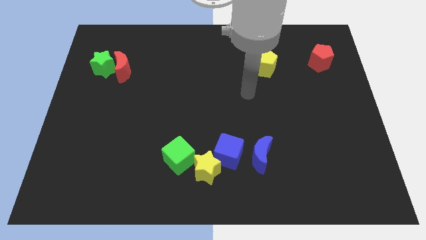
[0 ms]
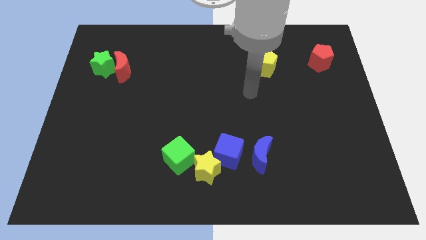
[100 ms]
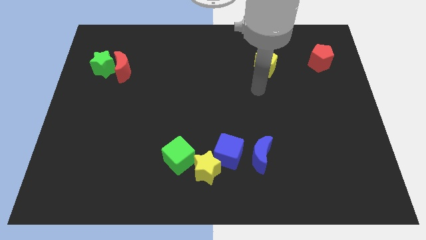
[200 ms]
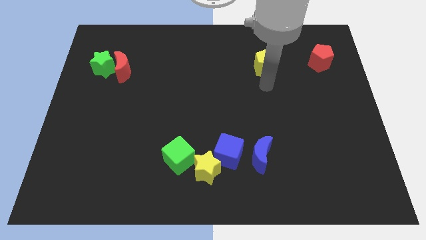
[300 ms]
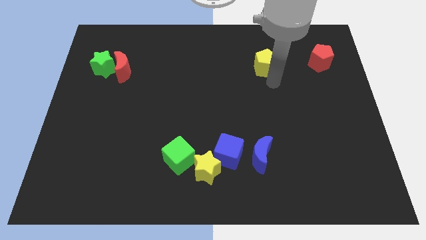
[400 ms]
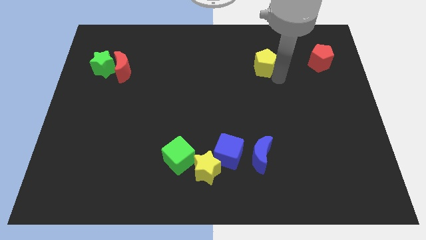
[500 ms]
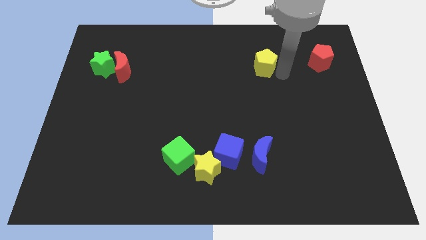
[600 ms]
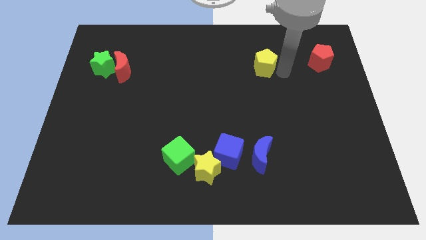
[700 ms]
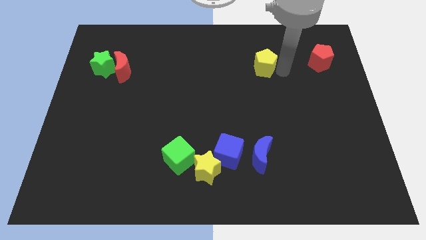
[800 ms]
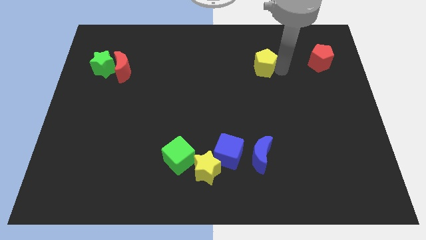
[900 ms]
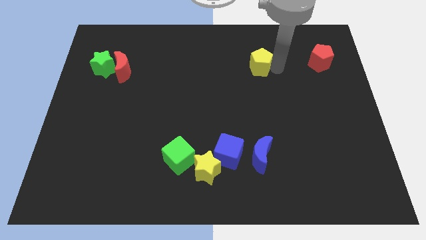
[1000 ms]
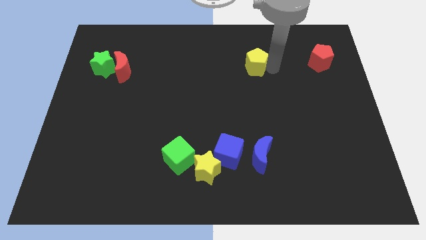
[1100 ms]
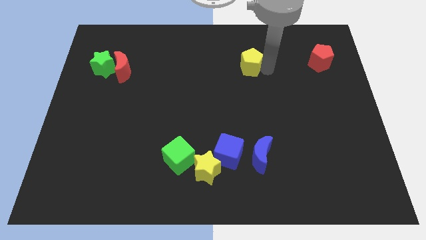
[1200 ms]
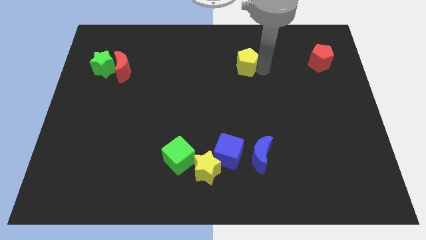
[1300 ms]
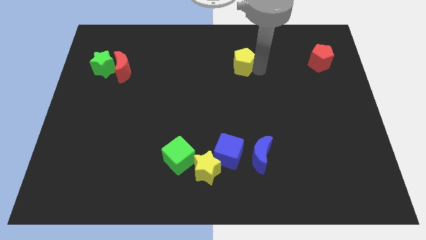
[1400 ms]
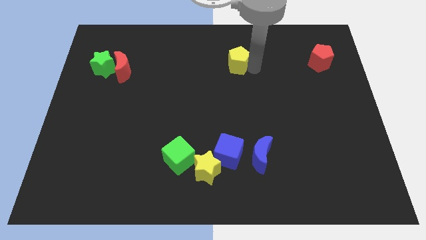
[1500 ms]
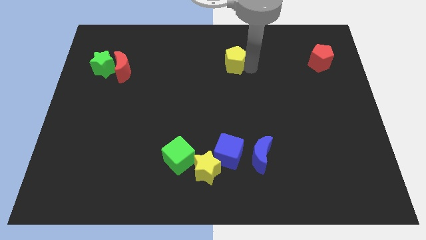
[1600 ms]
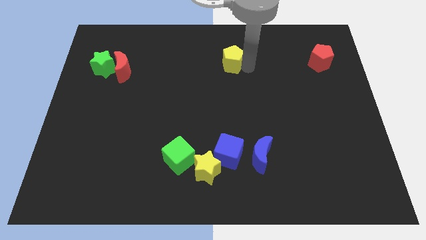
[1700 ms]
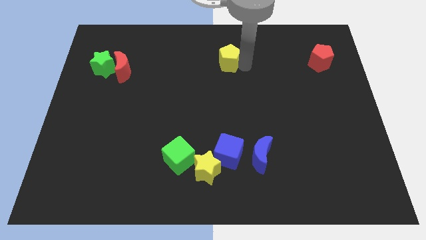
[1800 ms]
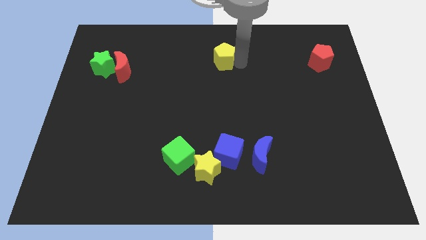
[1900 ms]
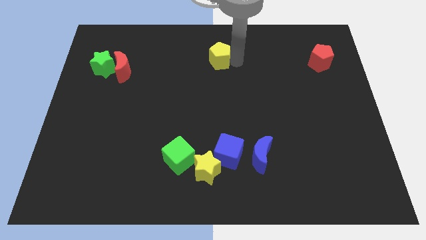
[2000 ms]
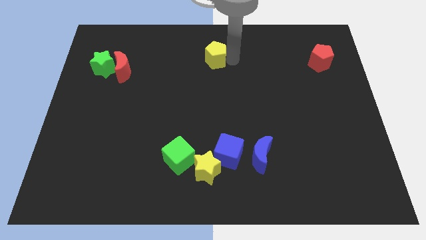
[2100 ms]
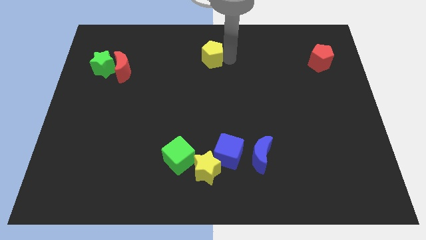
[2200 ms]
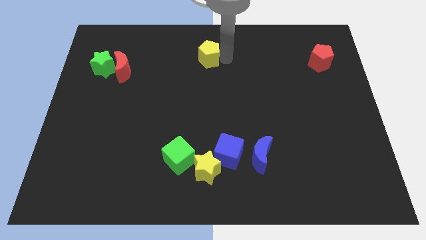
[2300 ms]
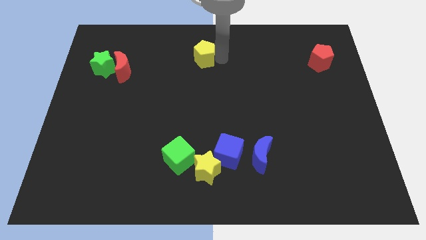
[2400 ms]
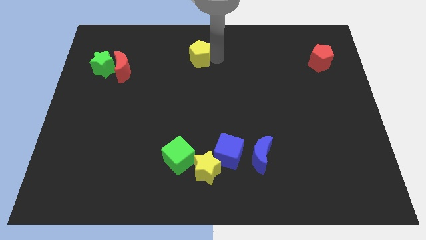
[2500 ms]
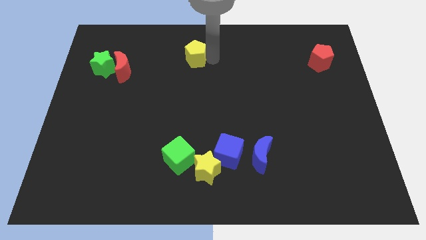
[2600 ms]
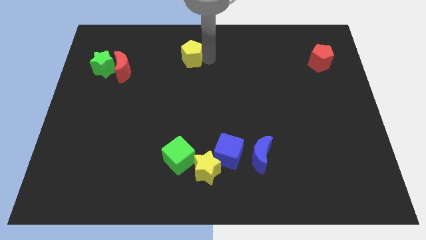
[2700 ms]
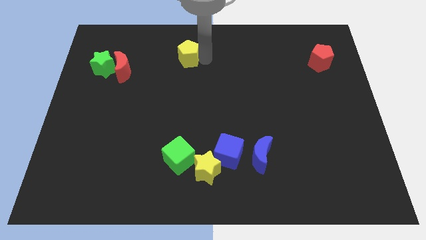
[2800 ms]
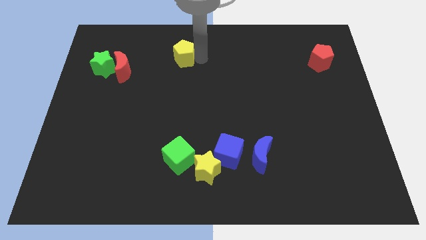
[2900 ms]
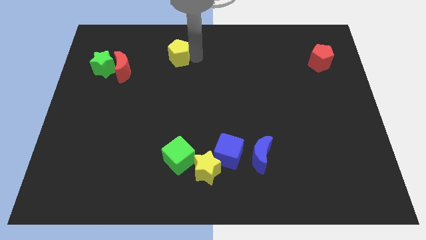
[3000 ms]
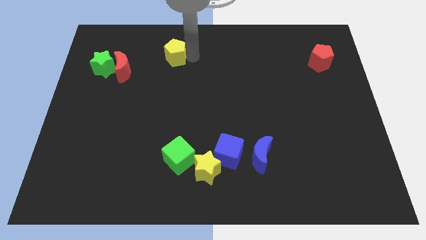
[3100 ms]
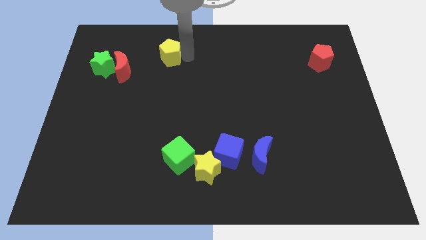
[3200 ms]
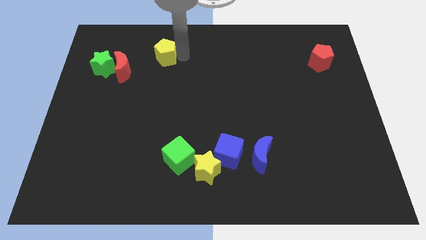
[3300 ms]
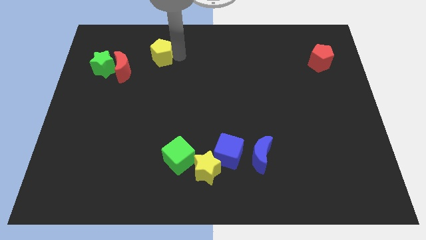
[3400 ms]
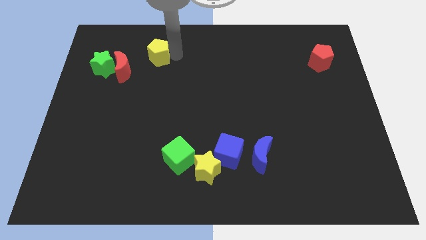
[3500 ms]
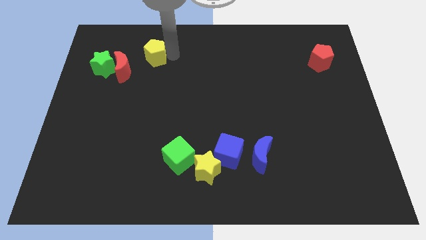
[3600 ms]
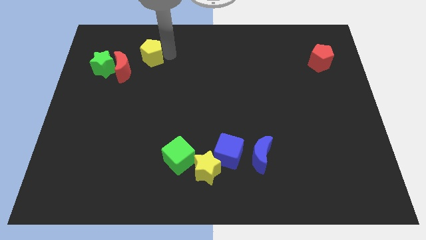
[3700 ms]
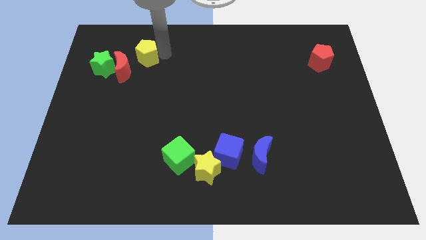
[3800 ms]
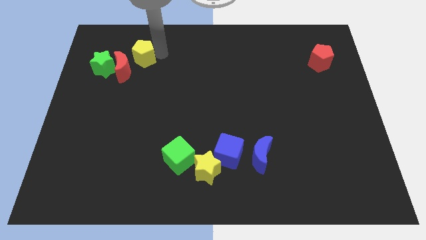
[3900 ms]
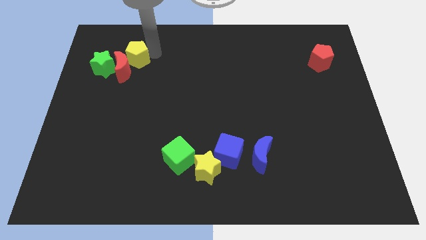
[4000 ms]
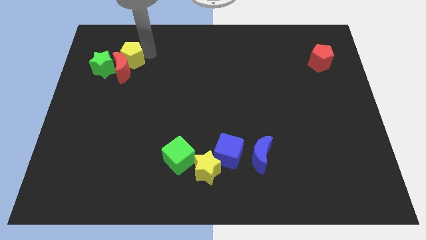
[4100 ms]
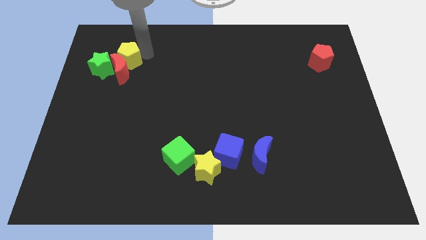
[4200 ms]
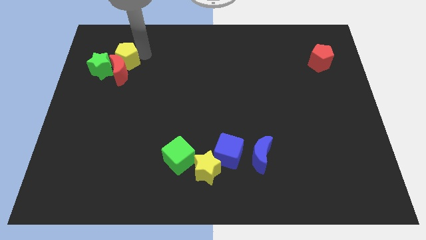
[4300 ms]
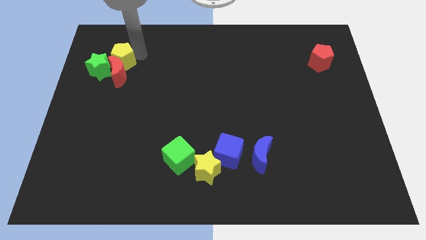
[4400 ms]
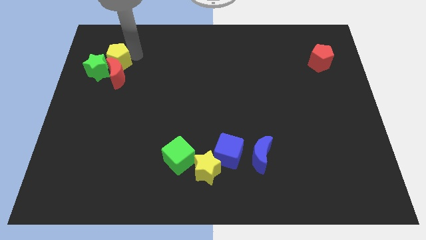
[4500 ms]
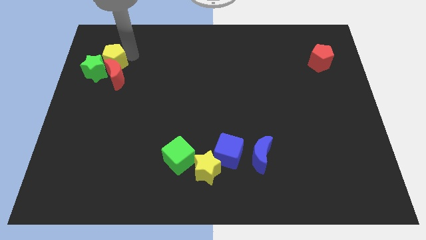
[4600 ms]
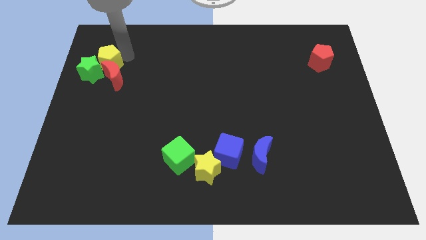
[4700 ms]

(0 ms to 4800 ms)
slide the yellow pentagon to the green star

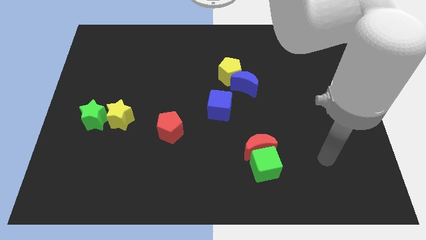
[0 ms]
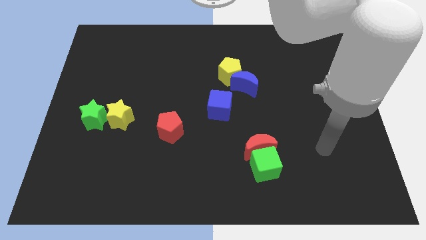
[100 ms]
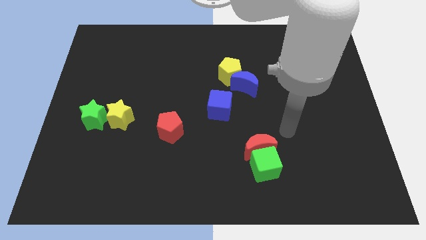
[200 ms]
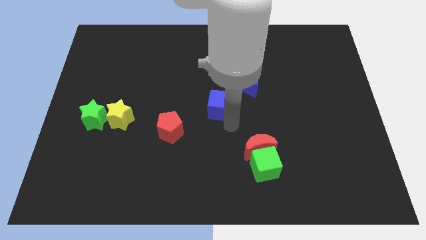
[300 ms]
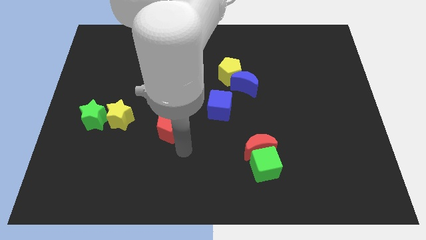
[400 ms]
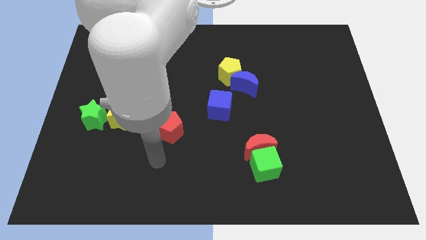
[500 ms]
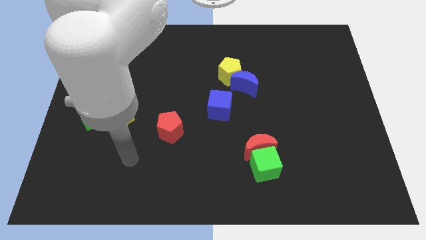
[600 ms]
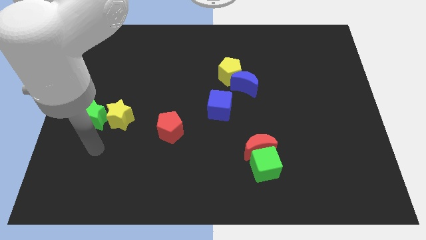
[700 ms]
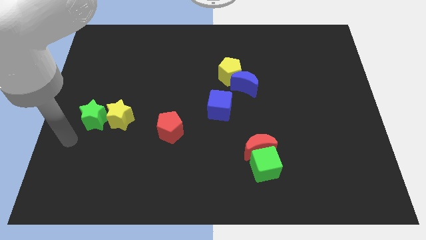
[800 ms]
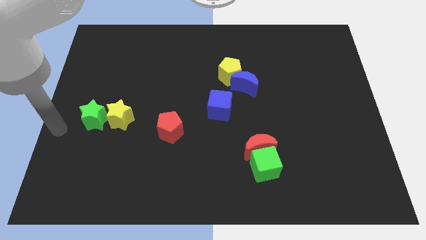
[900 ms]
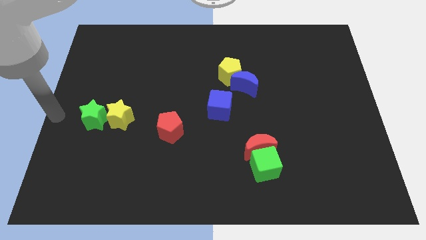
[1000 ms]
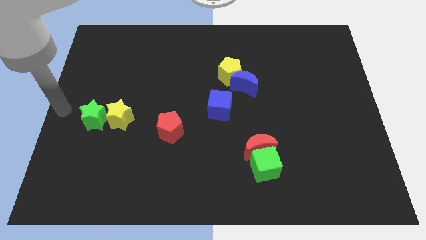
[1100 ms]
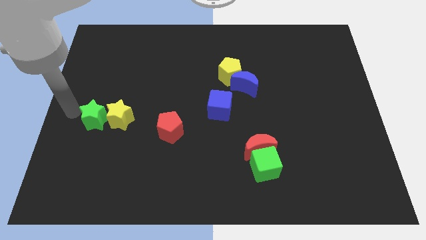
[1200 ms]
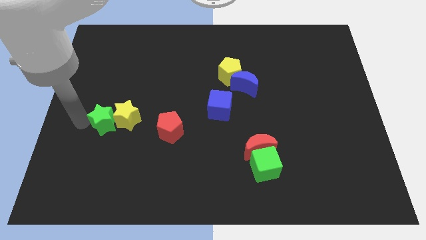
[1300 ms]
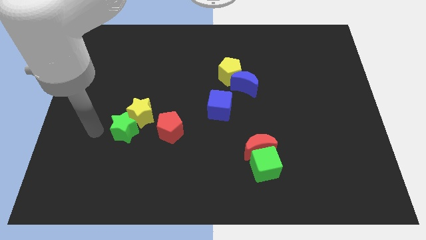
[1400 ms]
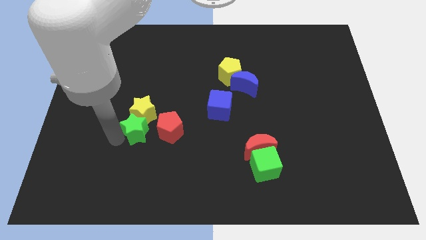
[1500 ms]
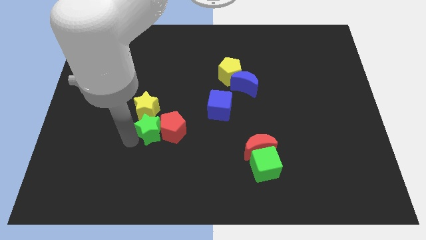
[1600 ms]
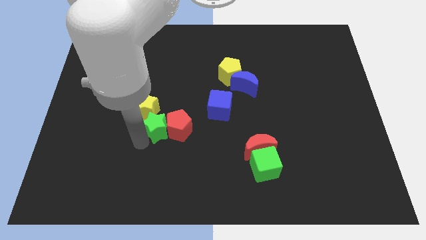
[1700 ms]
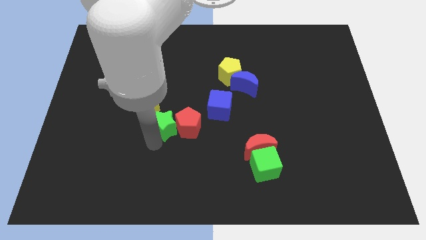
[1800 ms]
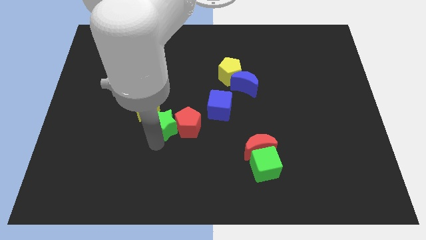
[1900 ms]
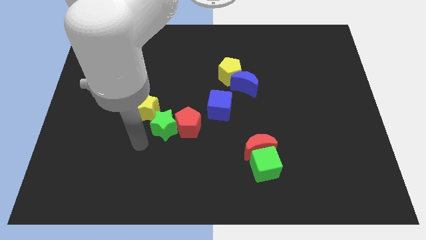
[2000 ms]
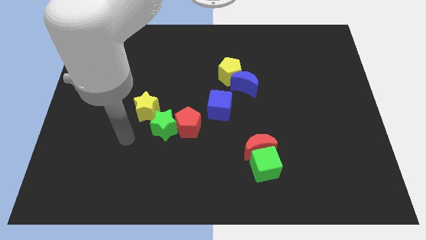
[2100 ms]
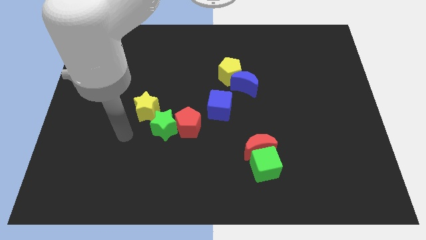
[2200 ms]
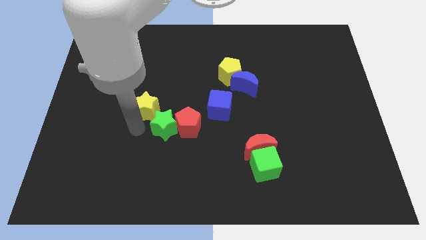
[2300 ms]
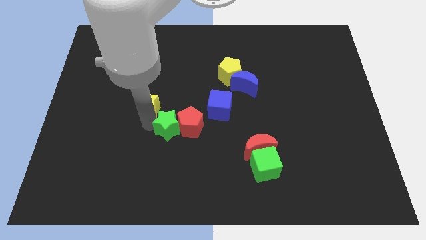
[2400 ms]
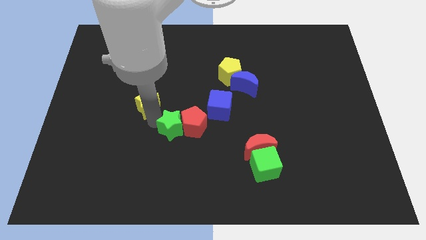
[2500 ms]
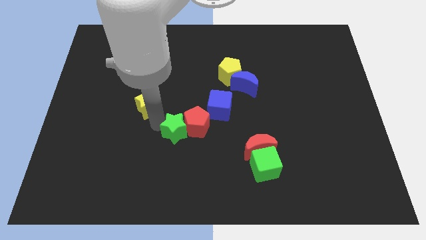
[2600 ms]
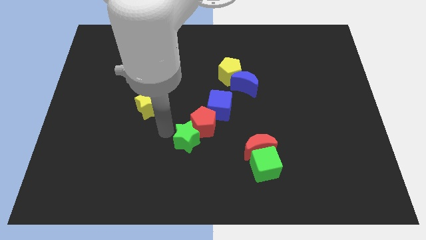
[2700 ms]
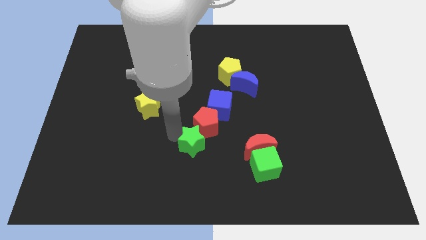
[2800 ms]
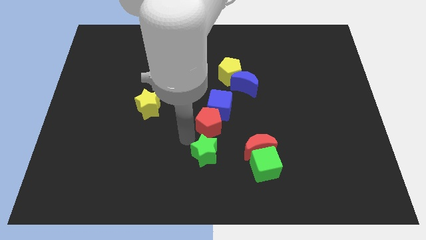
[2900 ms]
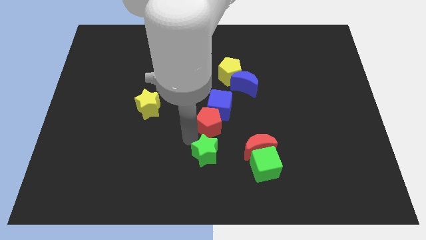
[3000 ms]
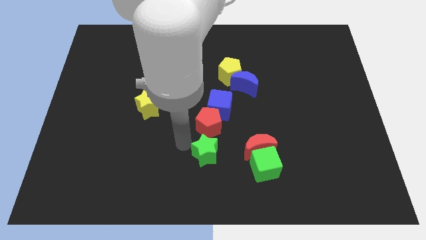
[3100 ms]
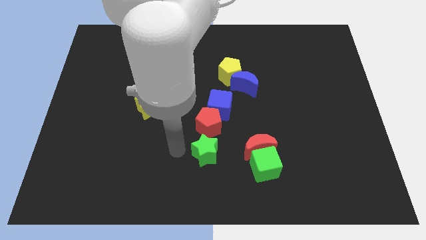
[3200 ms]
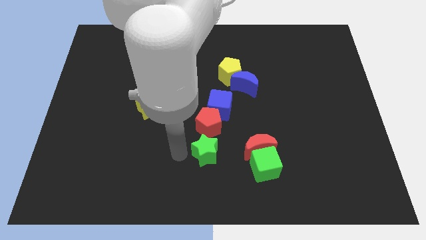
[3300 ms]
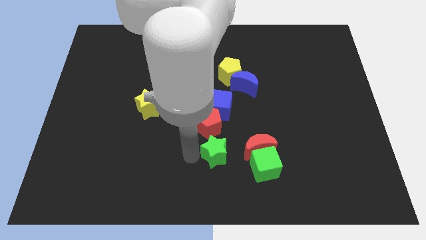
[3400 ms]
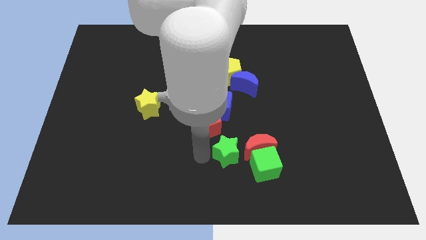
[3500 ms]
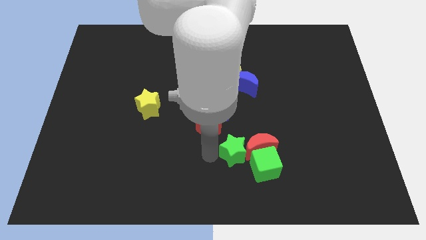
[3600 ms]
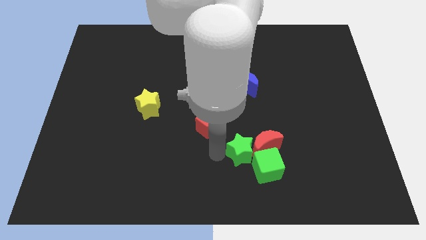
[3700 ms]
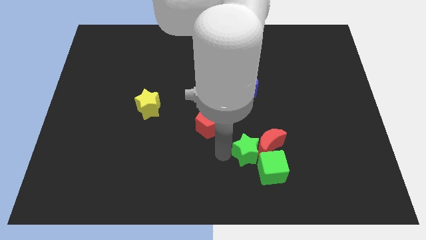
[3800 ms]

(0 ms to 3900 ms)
push the green star next to the red moon
